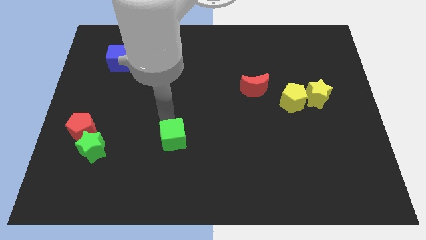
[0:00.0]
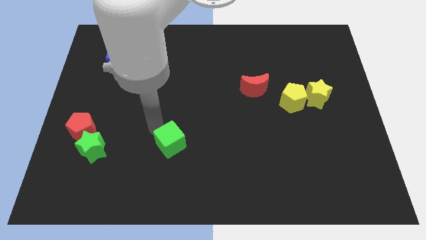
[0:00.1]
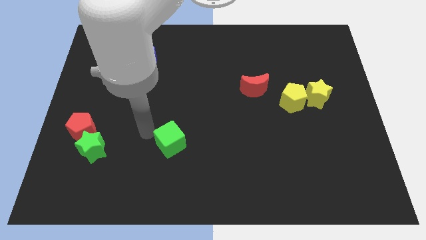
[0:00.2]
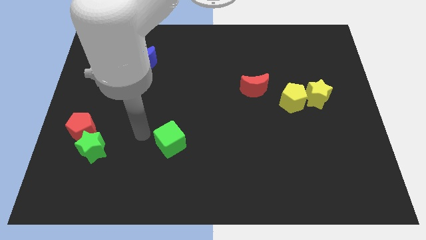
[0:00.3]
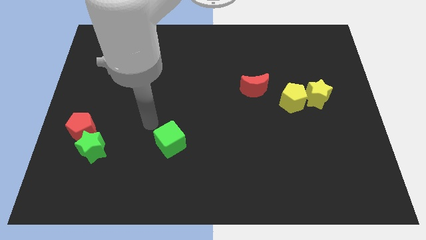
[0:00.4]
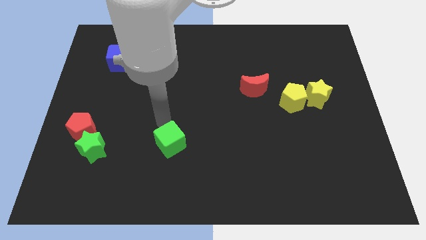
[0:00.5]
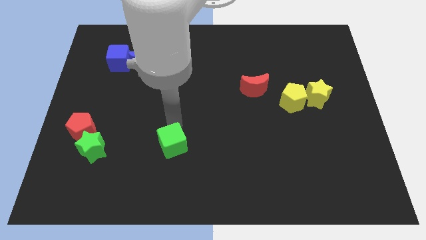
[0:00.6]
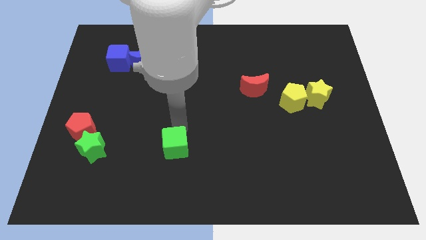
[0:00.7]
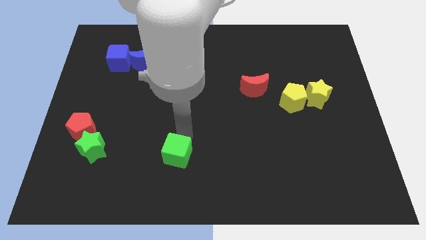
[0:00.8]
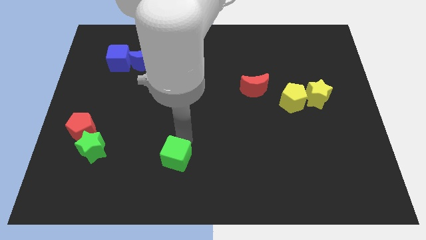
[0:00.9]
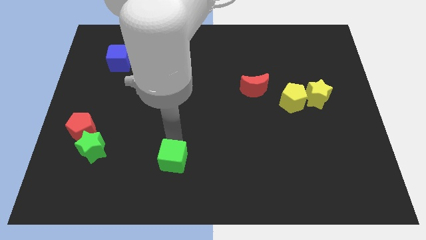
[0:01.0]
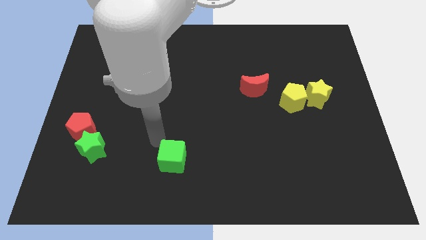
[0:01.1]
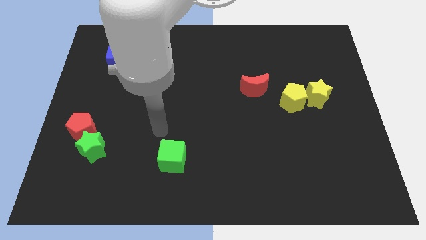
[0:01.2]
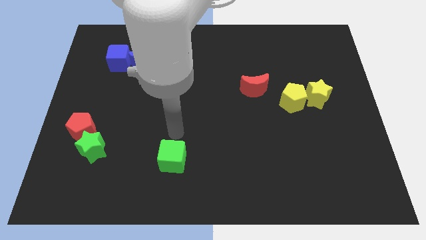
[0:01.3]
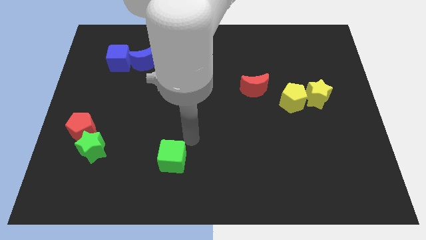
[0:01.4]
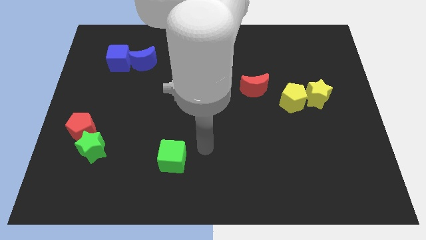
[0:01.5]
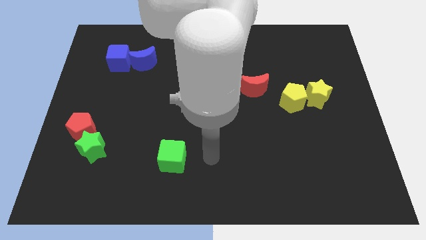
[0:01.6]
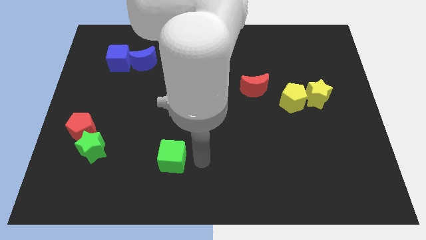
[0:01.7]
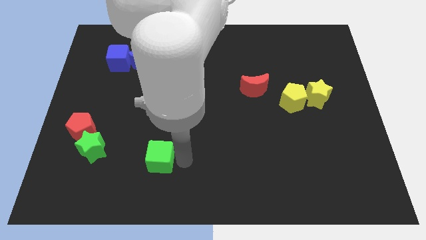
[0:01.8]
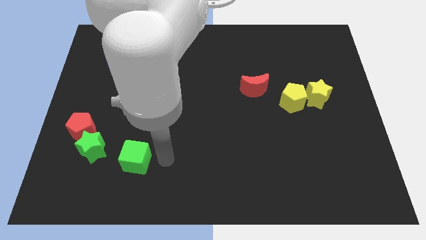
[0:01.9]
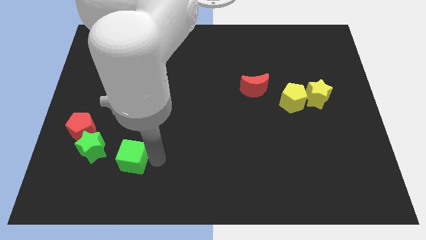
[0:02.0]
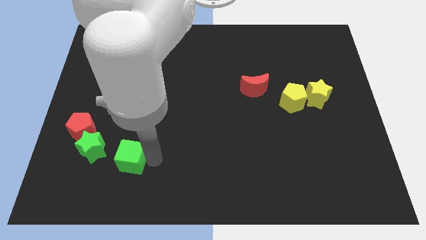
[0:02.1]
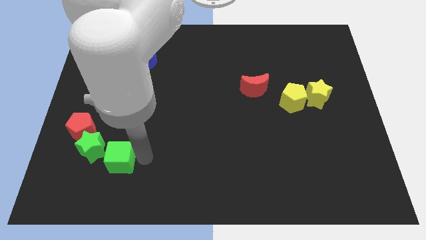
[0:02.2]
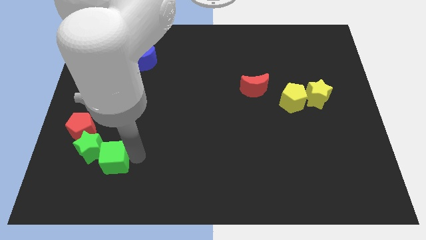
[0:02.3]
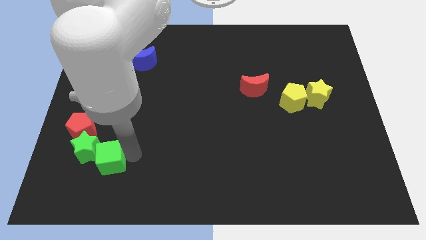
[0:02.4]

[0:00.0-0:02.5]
move green cube into green star

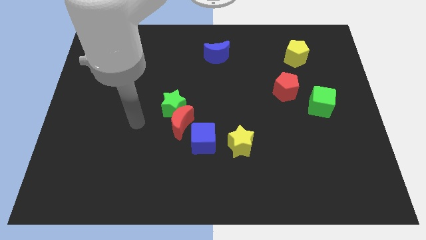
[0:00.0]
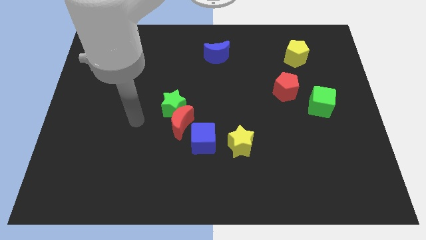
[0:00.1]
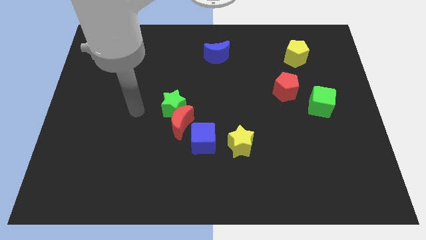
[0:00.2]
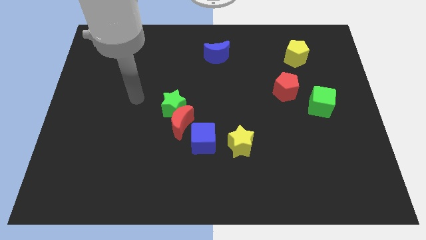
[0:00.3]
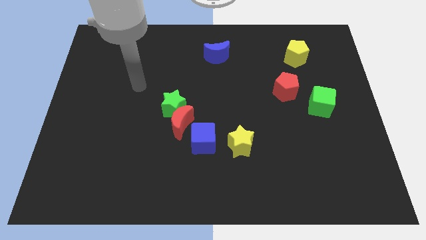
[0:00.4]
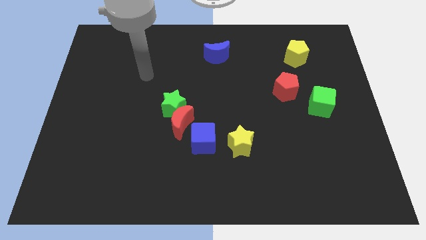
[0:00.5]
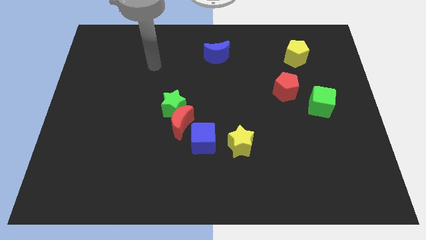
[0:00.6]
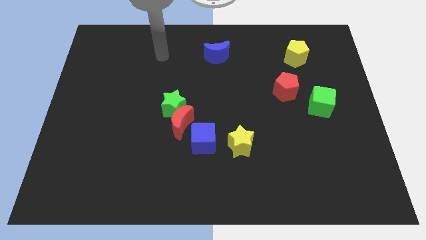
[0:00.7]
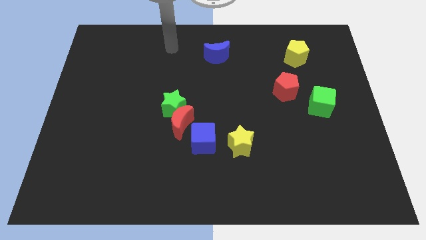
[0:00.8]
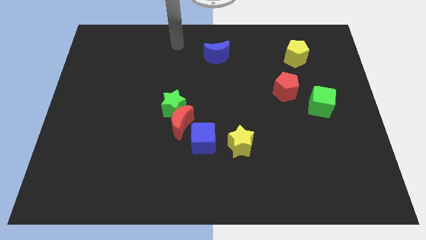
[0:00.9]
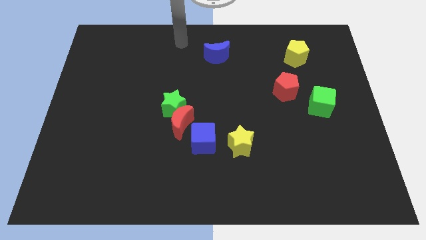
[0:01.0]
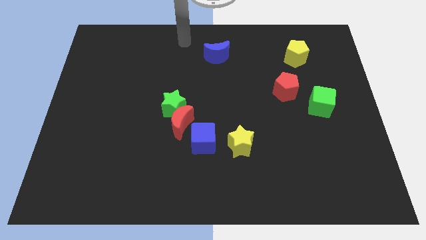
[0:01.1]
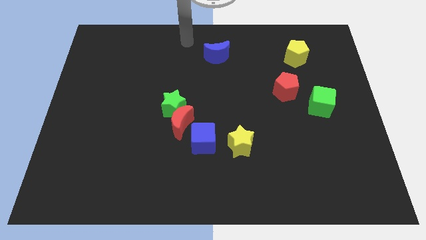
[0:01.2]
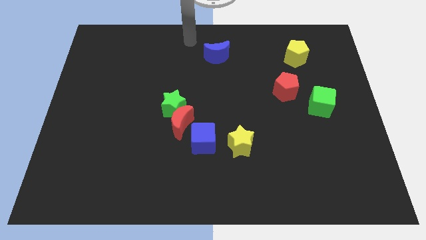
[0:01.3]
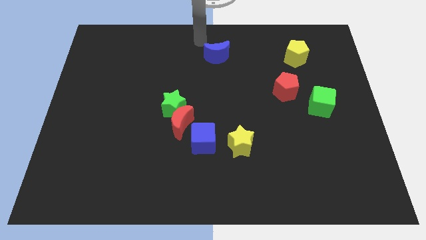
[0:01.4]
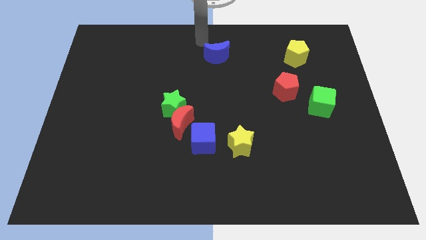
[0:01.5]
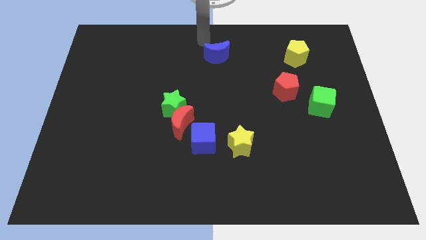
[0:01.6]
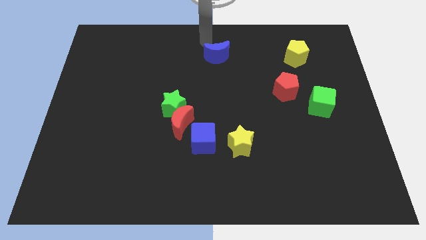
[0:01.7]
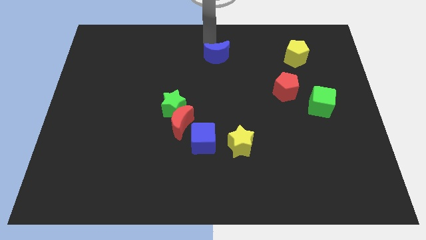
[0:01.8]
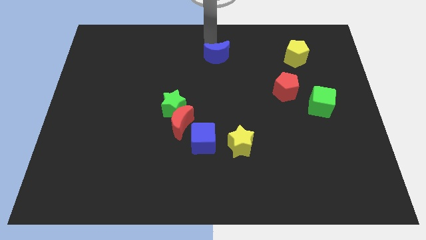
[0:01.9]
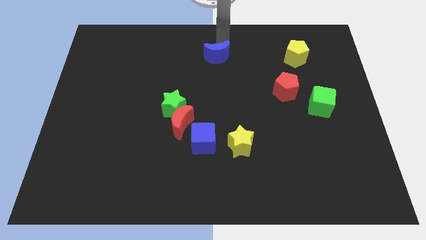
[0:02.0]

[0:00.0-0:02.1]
move arm to the top of blue crescent

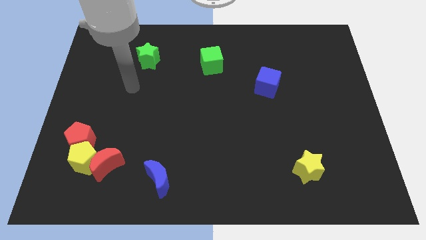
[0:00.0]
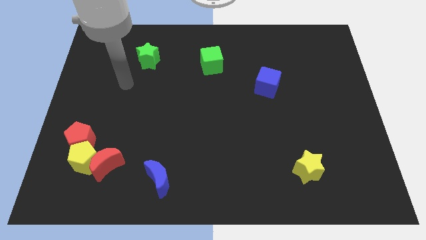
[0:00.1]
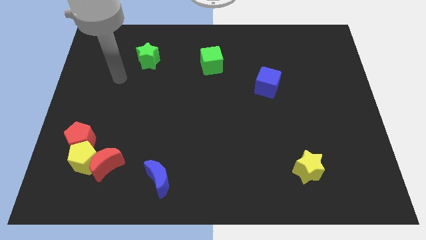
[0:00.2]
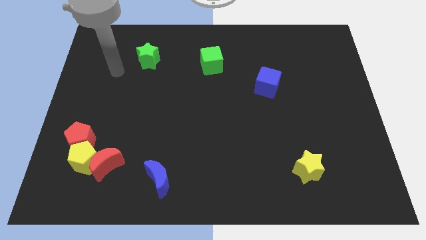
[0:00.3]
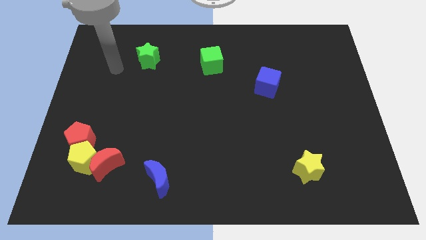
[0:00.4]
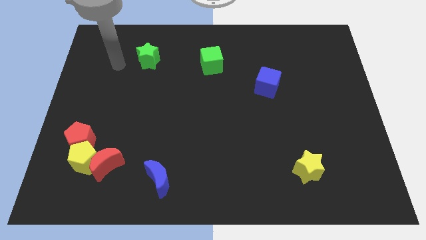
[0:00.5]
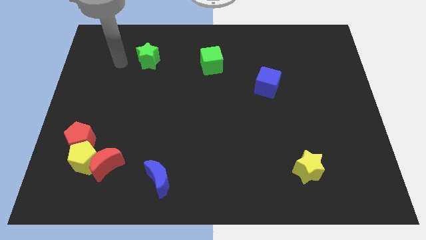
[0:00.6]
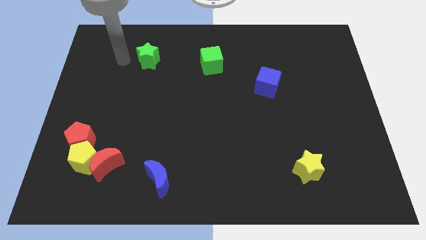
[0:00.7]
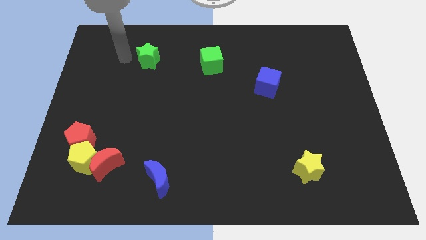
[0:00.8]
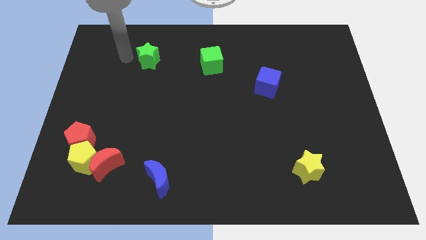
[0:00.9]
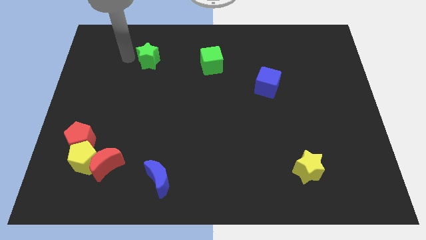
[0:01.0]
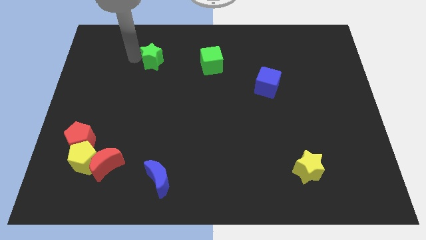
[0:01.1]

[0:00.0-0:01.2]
tap green star

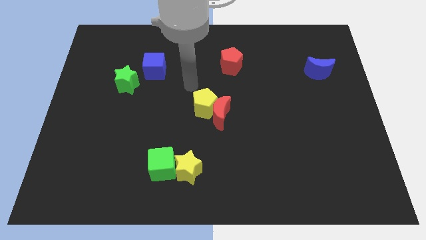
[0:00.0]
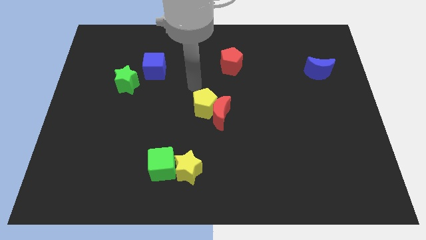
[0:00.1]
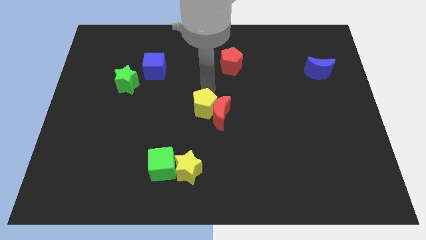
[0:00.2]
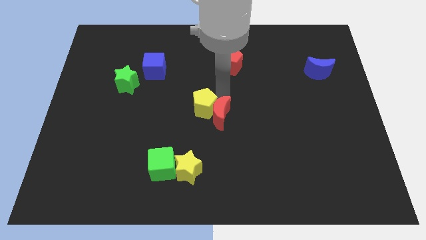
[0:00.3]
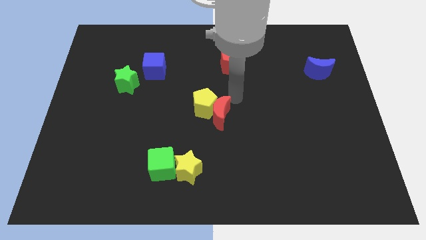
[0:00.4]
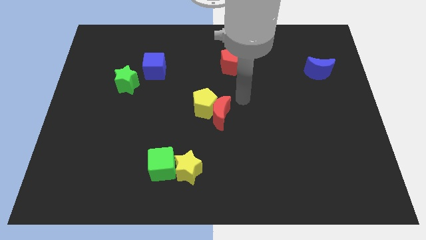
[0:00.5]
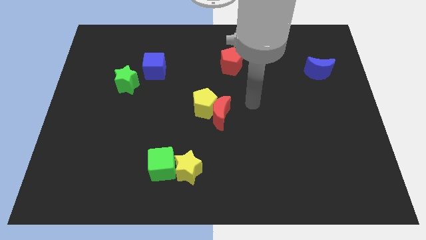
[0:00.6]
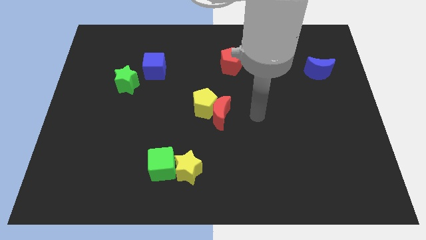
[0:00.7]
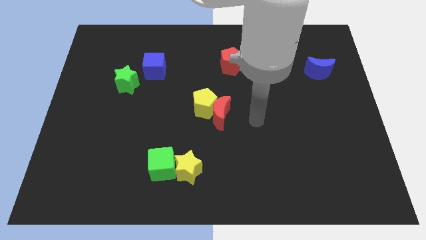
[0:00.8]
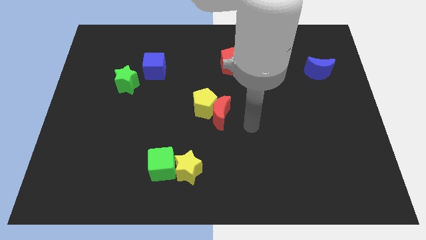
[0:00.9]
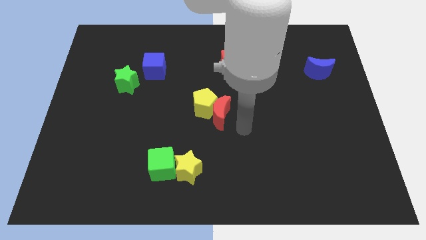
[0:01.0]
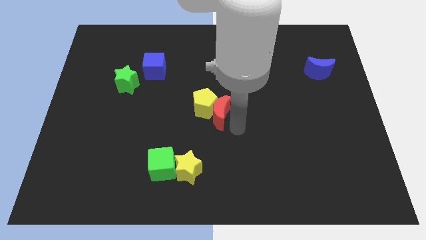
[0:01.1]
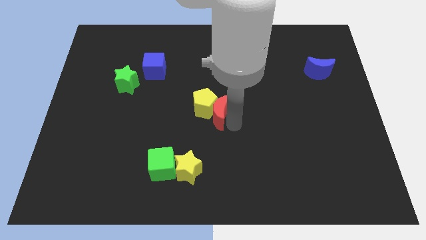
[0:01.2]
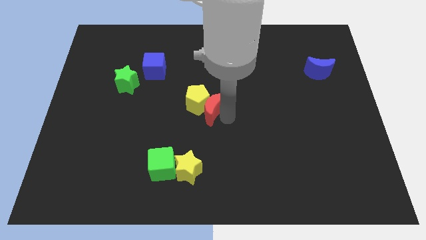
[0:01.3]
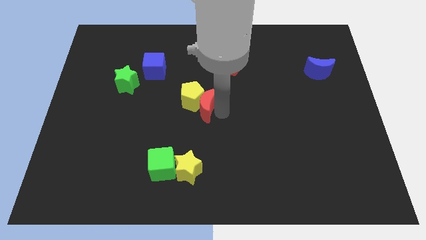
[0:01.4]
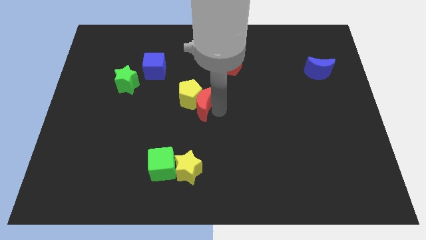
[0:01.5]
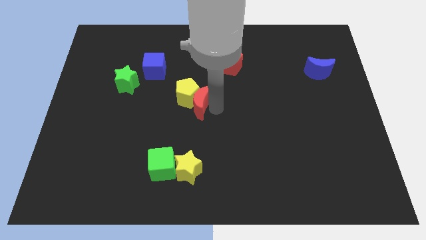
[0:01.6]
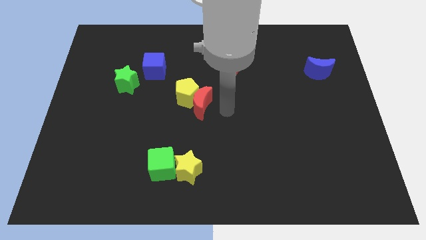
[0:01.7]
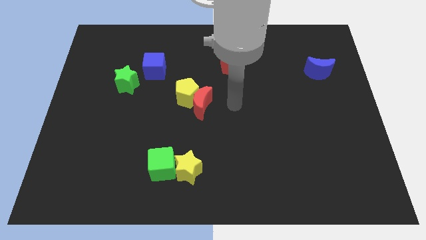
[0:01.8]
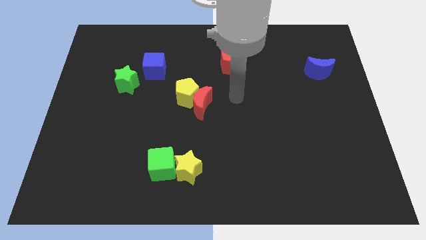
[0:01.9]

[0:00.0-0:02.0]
push the red moon into the yellow pentagon

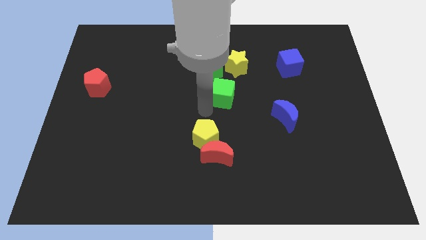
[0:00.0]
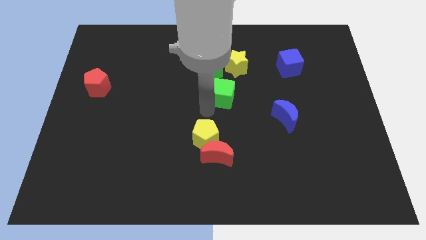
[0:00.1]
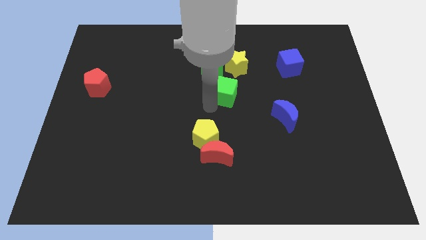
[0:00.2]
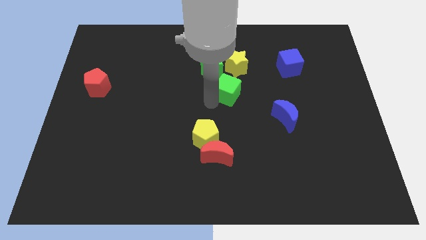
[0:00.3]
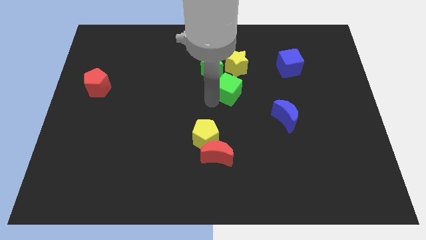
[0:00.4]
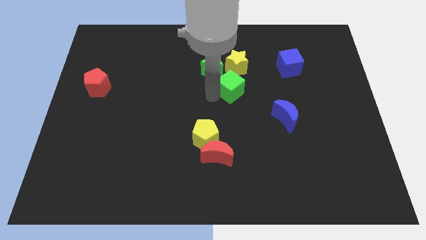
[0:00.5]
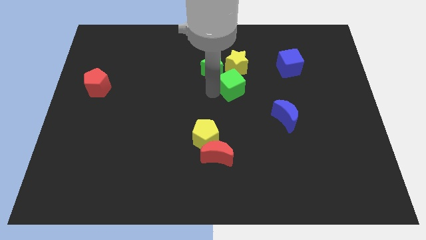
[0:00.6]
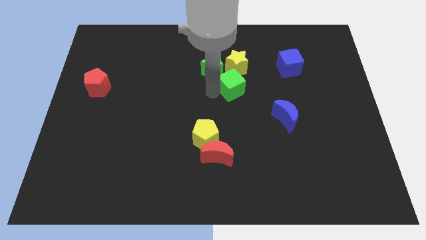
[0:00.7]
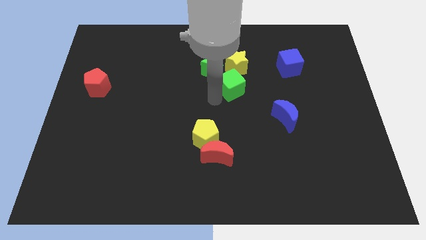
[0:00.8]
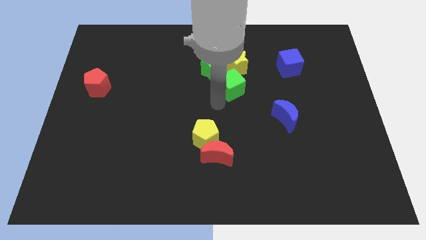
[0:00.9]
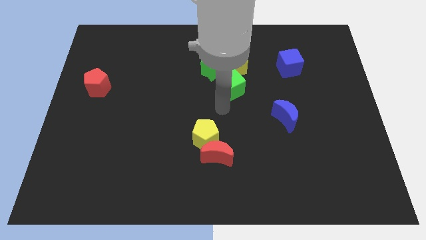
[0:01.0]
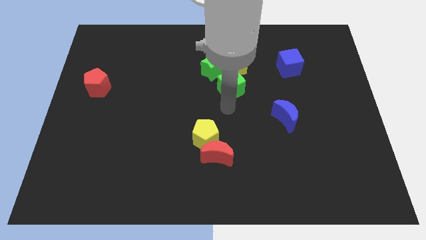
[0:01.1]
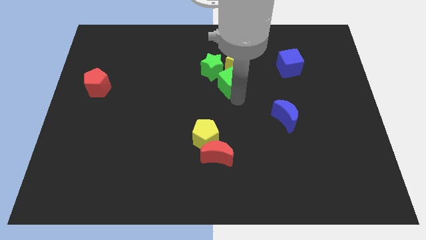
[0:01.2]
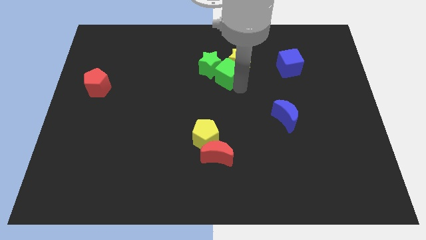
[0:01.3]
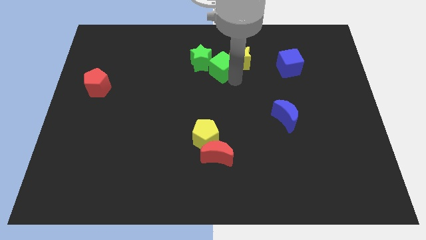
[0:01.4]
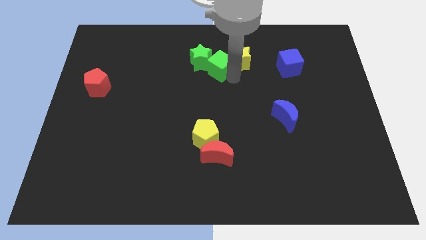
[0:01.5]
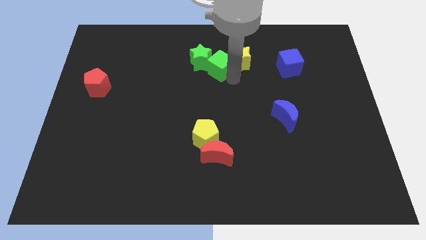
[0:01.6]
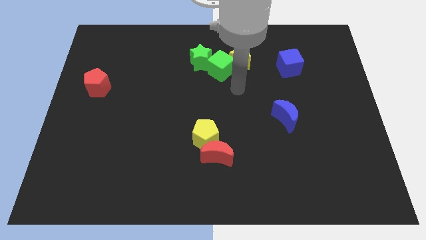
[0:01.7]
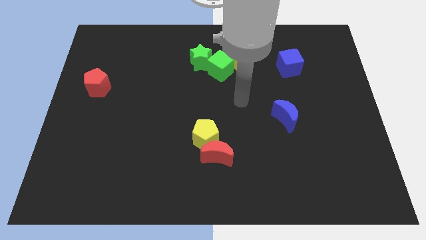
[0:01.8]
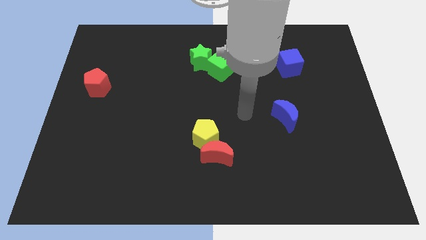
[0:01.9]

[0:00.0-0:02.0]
push the green cube into green star towards up
